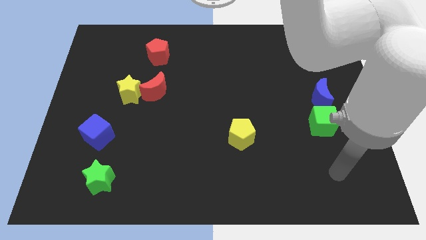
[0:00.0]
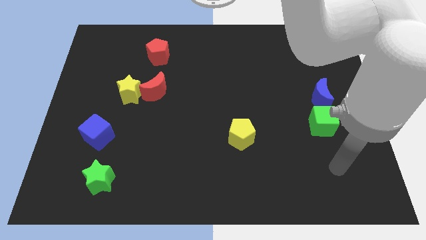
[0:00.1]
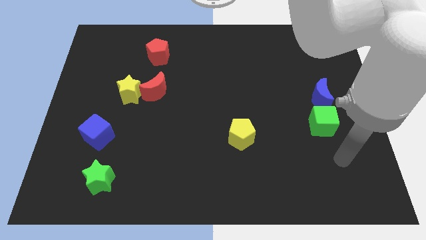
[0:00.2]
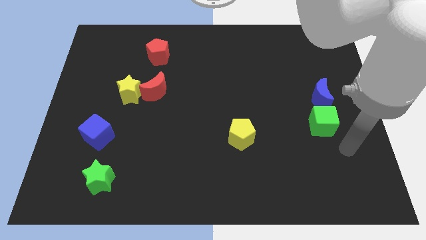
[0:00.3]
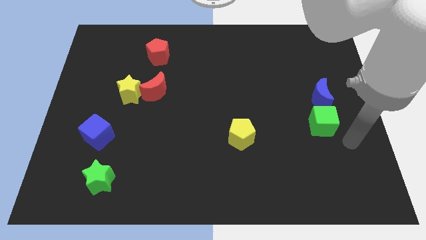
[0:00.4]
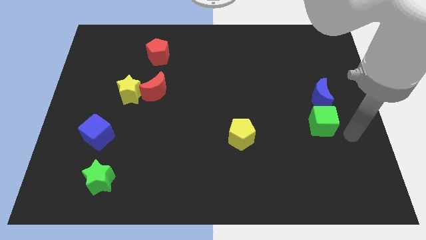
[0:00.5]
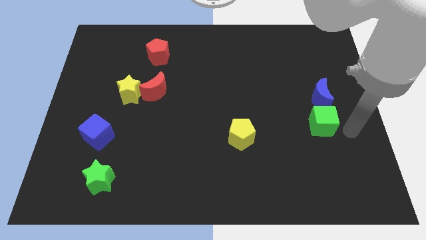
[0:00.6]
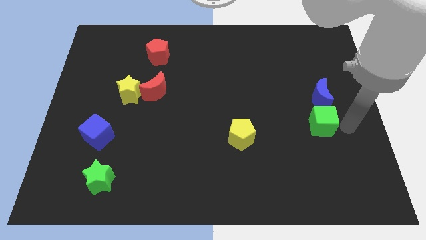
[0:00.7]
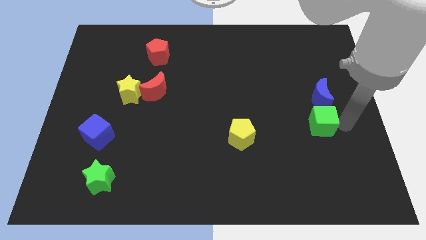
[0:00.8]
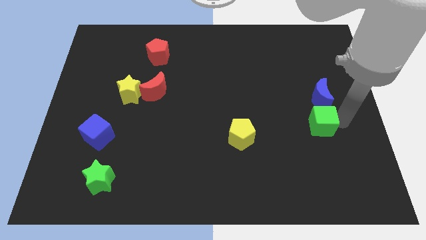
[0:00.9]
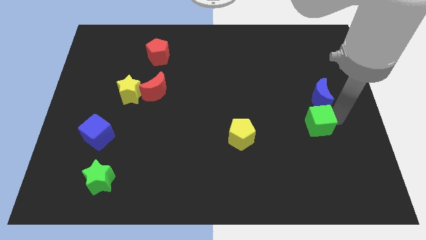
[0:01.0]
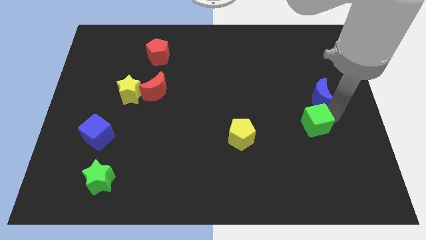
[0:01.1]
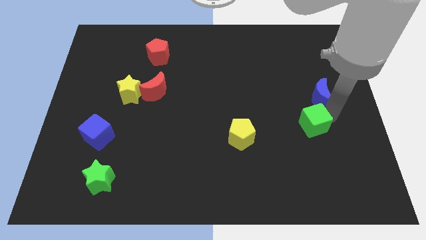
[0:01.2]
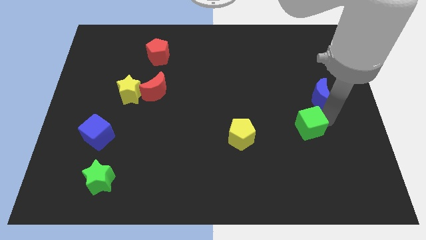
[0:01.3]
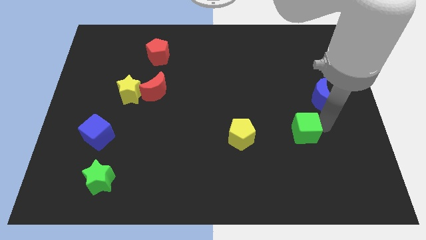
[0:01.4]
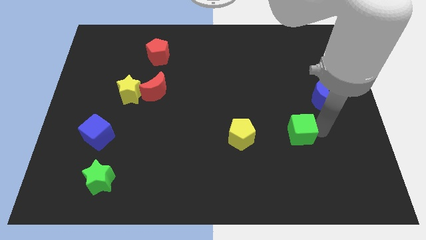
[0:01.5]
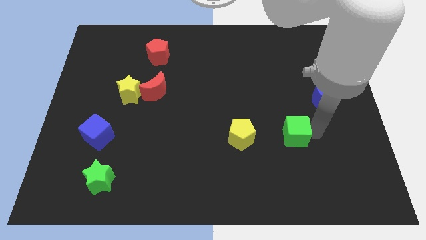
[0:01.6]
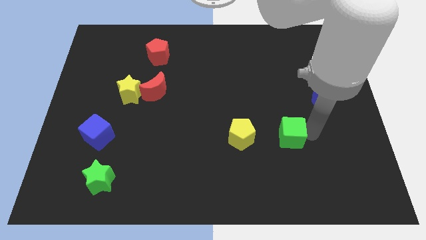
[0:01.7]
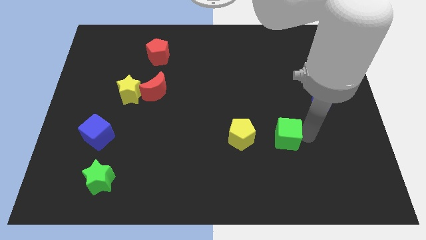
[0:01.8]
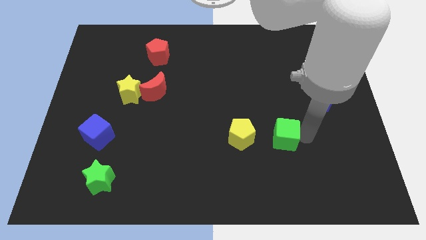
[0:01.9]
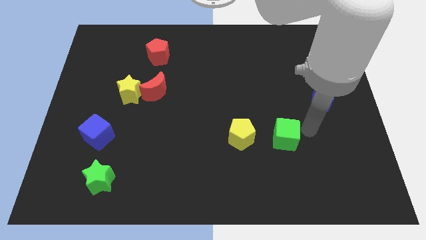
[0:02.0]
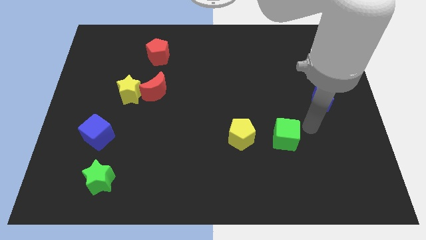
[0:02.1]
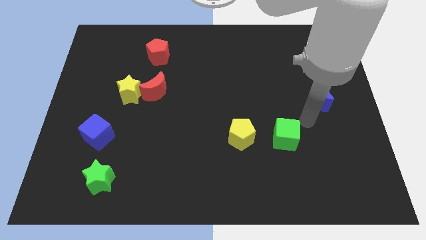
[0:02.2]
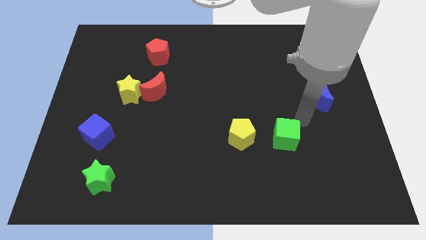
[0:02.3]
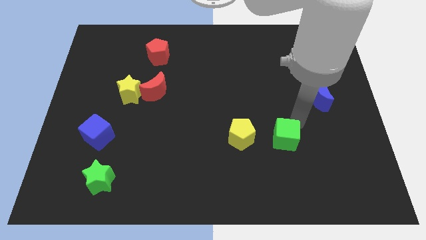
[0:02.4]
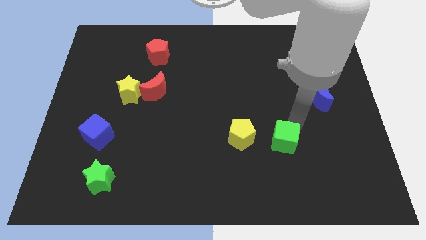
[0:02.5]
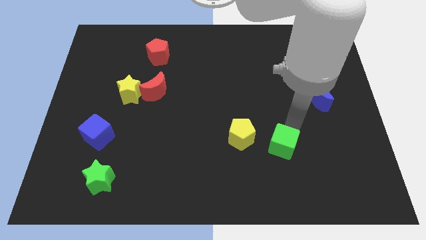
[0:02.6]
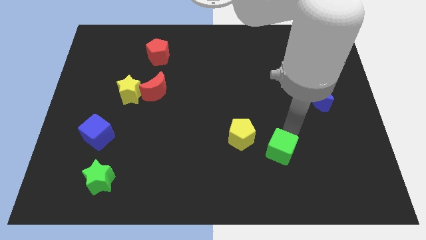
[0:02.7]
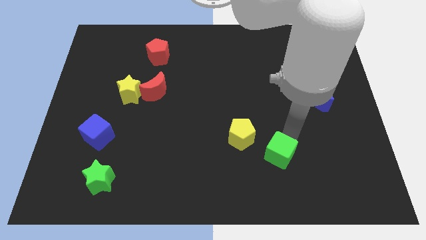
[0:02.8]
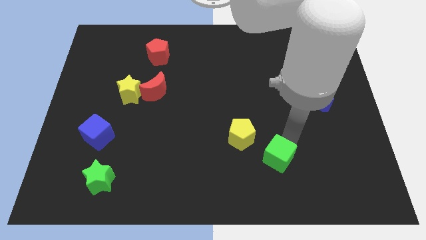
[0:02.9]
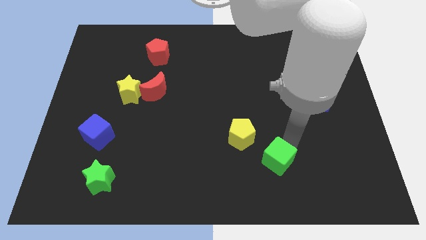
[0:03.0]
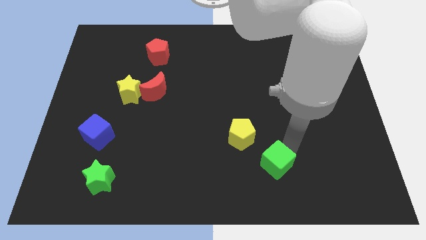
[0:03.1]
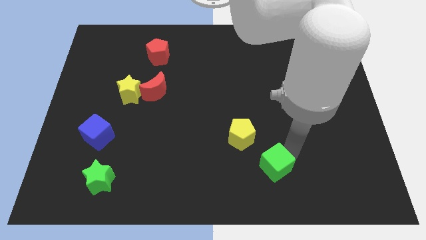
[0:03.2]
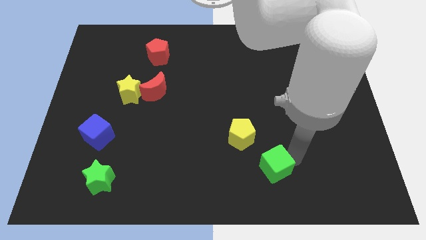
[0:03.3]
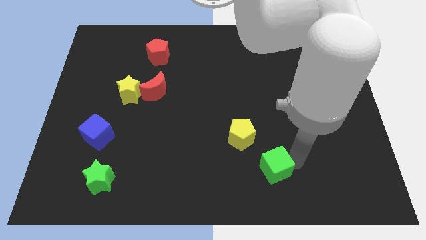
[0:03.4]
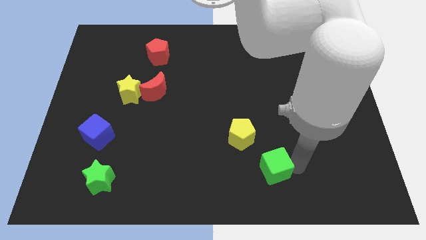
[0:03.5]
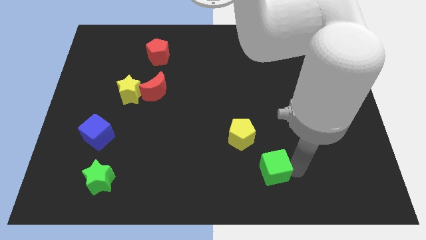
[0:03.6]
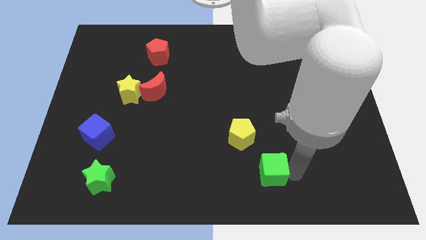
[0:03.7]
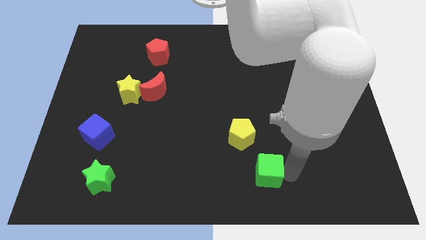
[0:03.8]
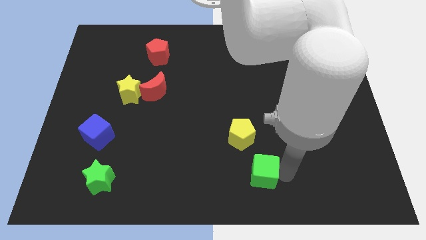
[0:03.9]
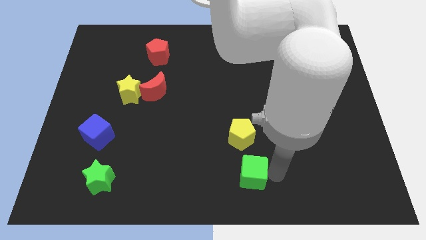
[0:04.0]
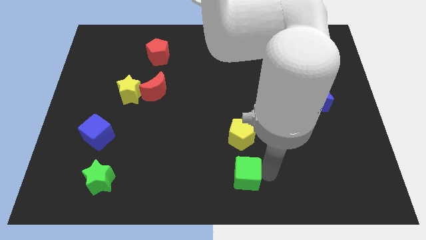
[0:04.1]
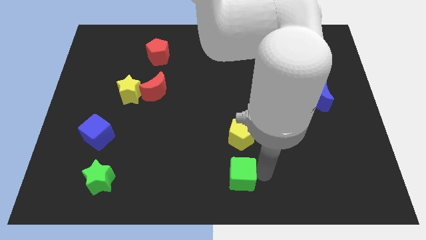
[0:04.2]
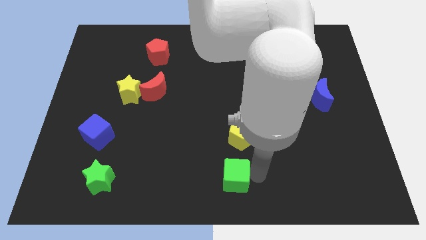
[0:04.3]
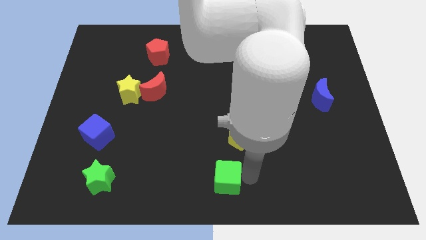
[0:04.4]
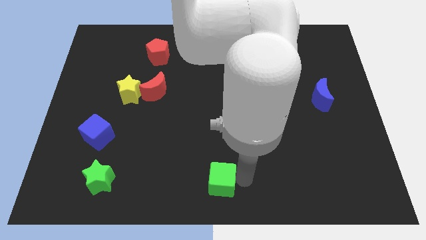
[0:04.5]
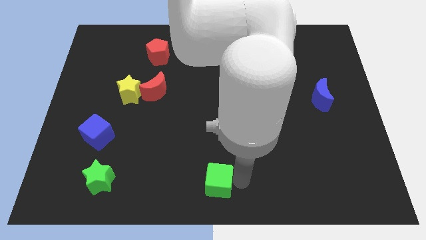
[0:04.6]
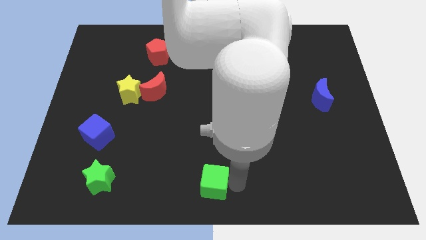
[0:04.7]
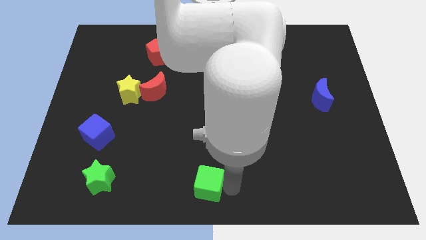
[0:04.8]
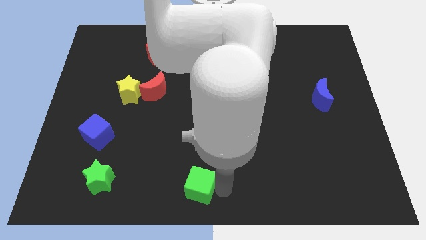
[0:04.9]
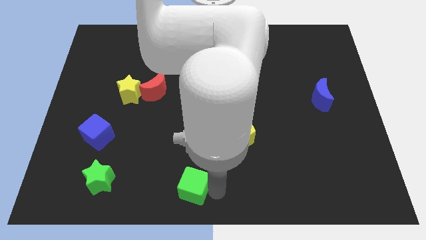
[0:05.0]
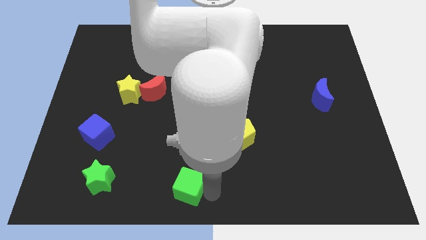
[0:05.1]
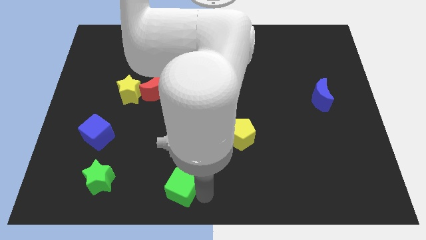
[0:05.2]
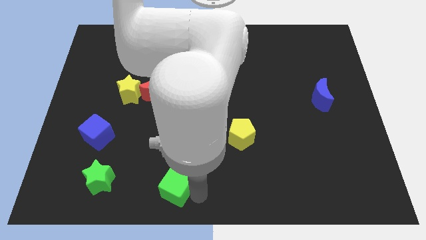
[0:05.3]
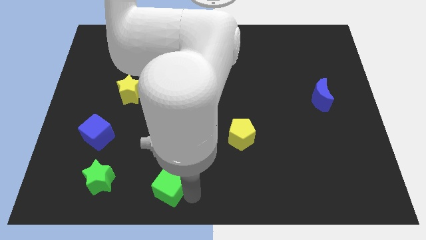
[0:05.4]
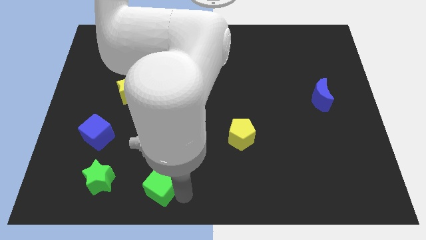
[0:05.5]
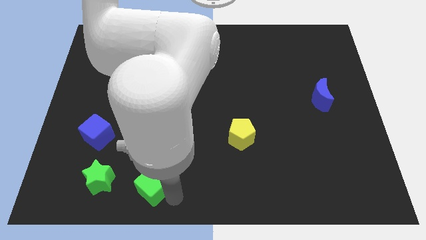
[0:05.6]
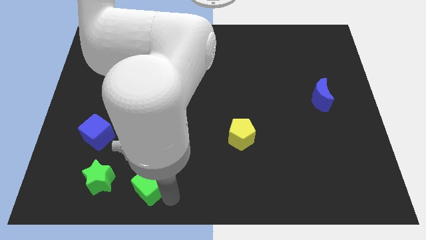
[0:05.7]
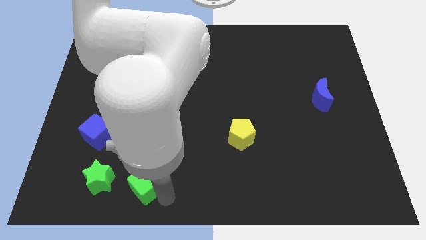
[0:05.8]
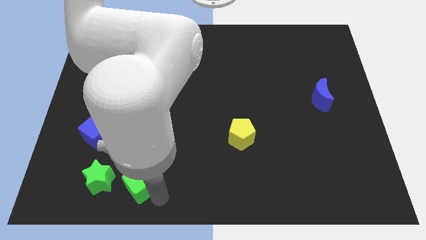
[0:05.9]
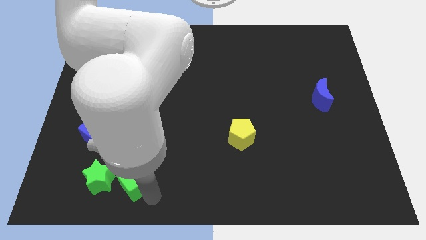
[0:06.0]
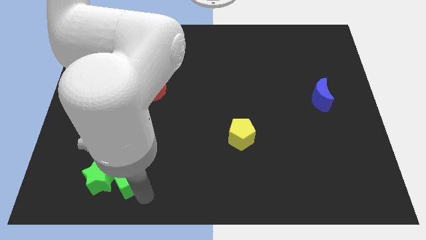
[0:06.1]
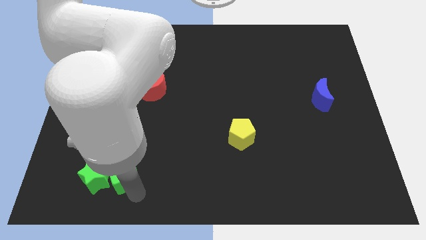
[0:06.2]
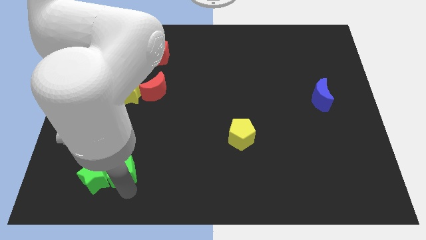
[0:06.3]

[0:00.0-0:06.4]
put the green cube close to the green star

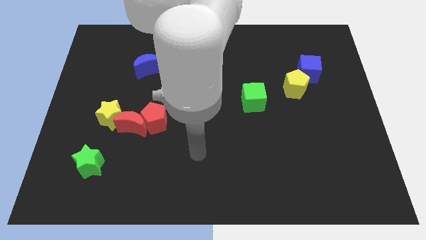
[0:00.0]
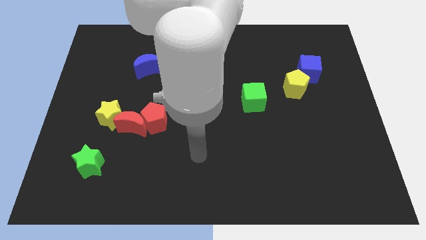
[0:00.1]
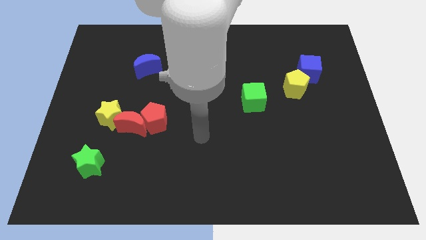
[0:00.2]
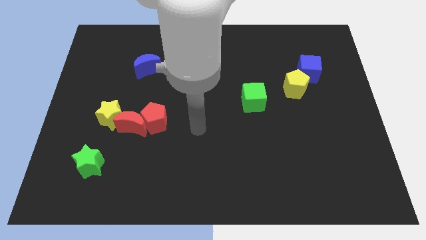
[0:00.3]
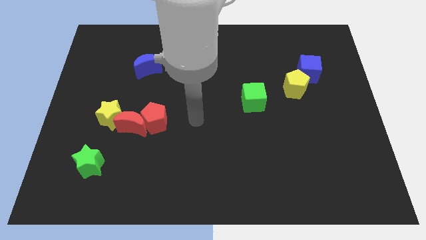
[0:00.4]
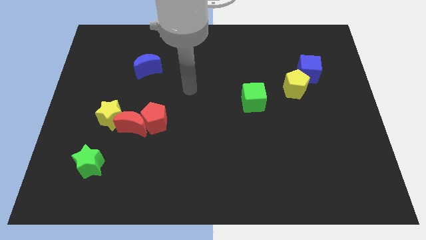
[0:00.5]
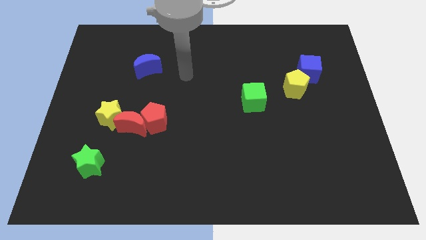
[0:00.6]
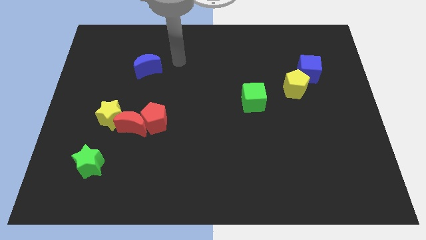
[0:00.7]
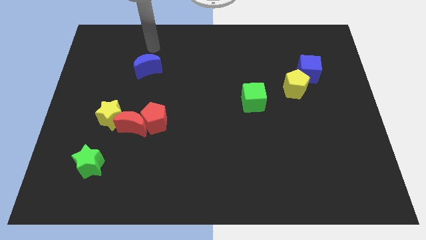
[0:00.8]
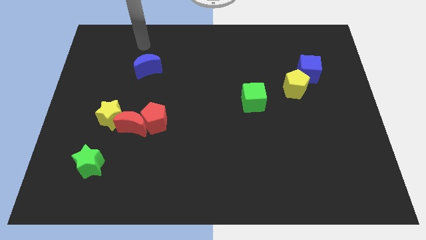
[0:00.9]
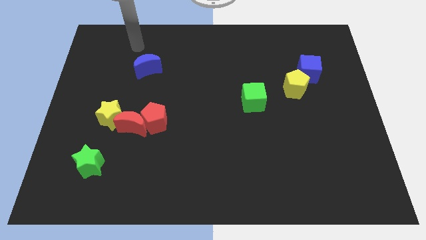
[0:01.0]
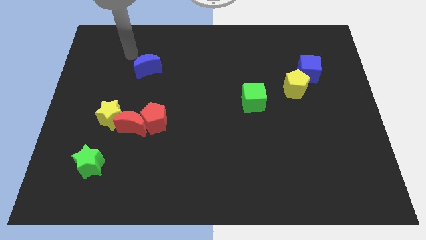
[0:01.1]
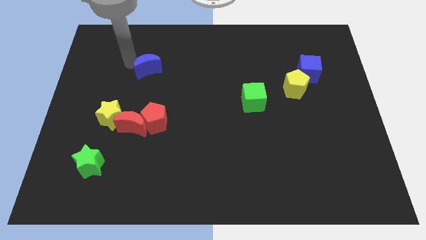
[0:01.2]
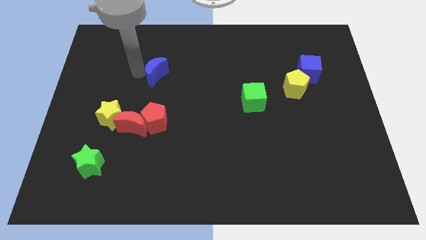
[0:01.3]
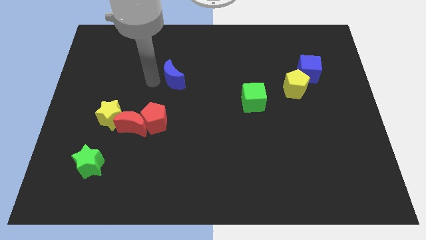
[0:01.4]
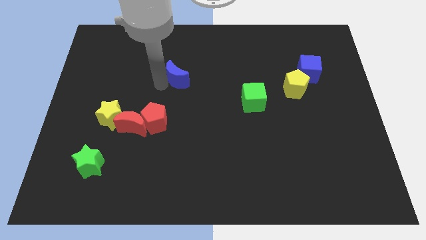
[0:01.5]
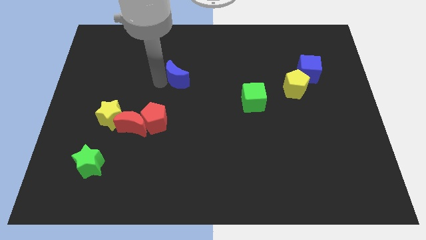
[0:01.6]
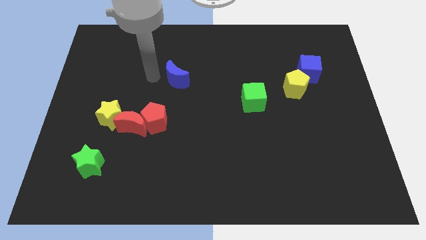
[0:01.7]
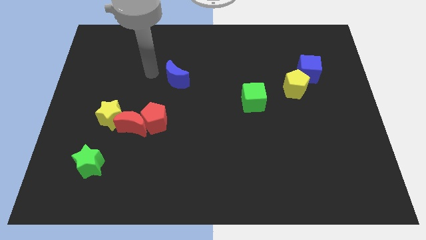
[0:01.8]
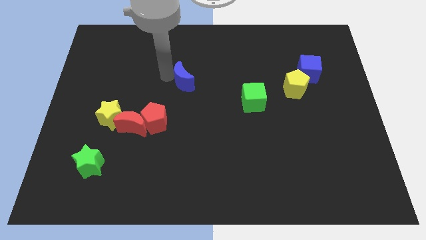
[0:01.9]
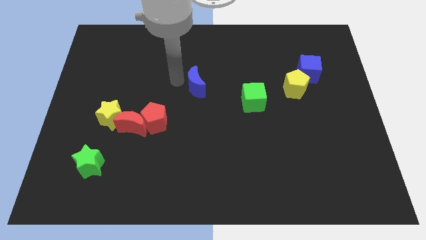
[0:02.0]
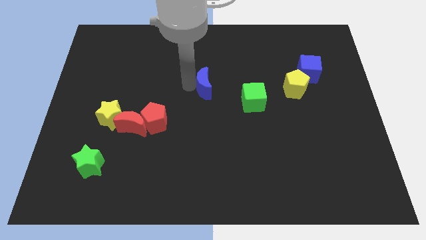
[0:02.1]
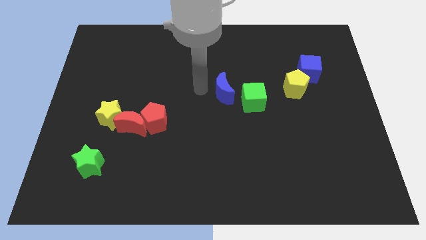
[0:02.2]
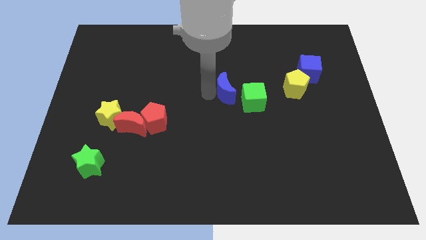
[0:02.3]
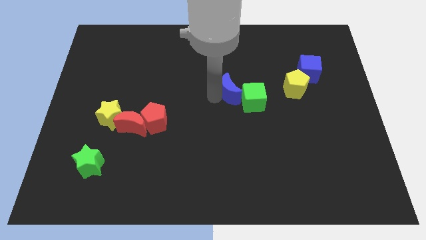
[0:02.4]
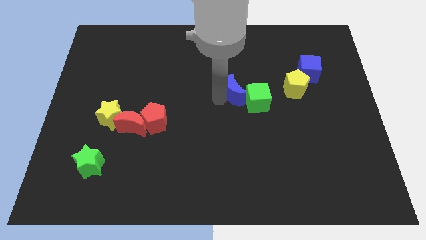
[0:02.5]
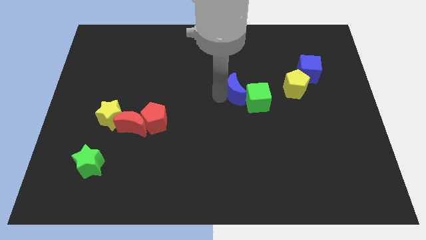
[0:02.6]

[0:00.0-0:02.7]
push the blue moon close to the green cube
